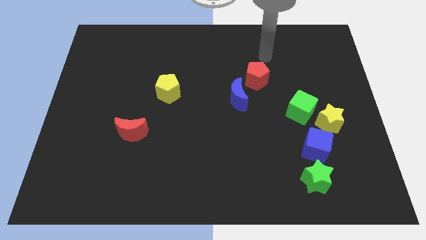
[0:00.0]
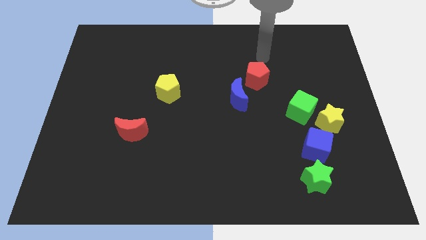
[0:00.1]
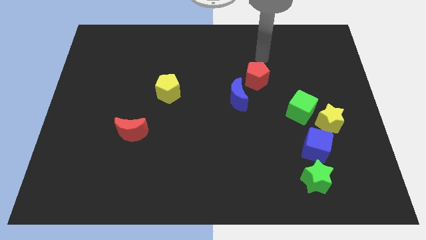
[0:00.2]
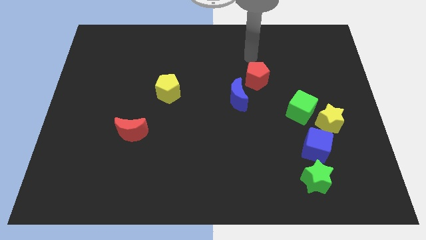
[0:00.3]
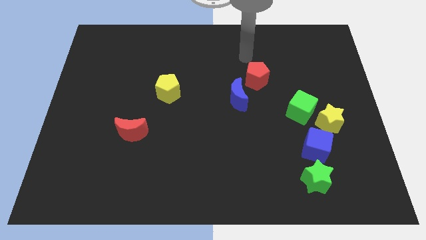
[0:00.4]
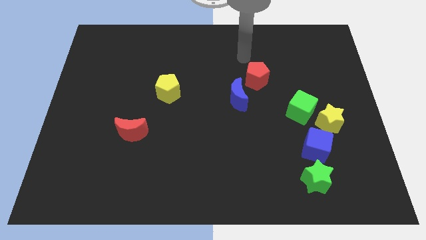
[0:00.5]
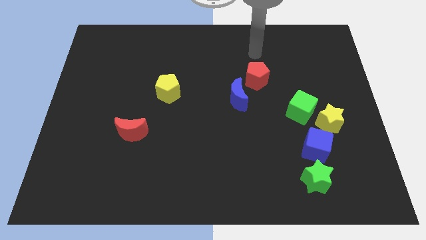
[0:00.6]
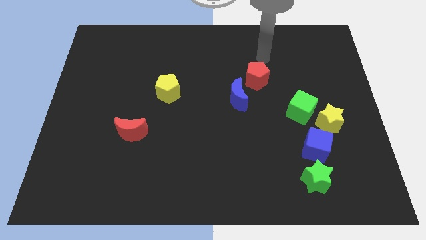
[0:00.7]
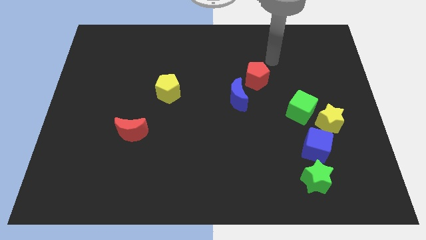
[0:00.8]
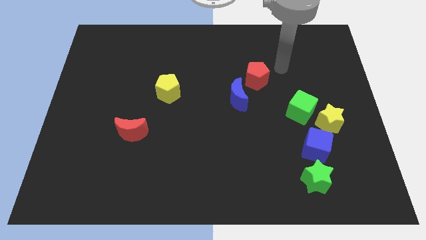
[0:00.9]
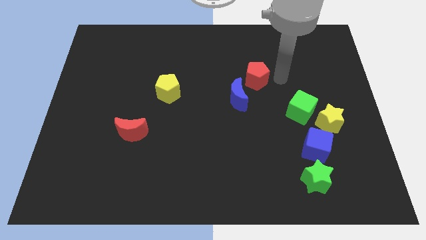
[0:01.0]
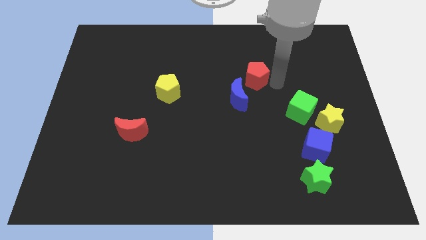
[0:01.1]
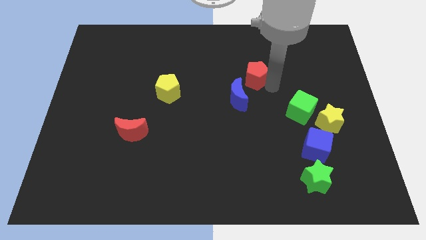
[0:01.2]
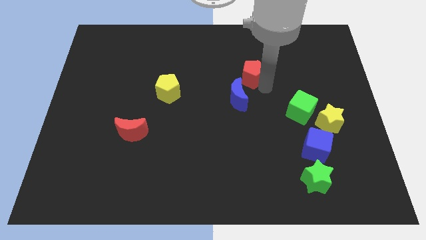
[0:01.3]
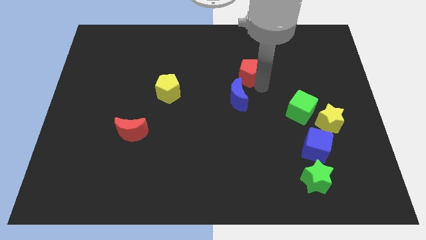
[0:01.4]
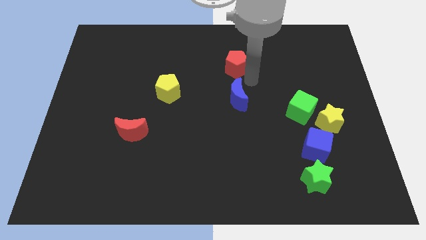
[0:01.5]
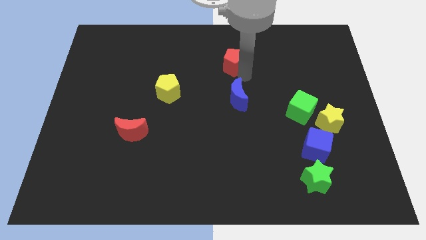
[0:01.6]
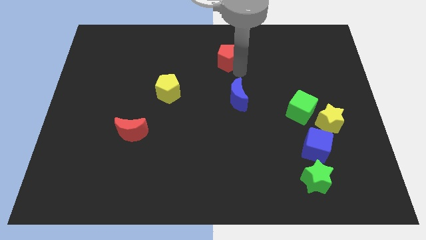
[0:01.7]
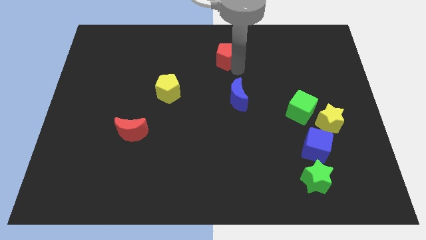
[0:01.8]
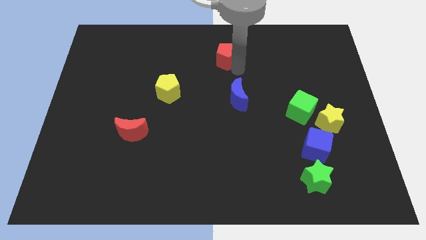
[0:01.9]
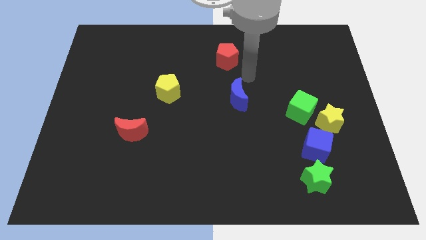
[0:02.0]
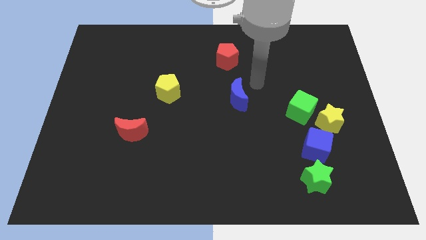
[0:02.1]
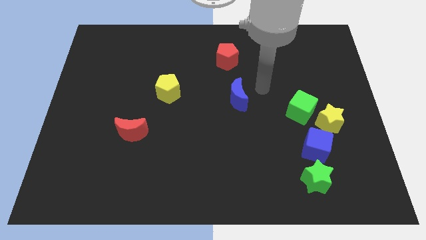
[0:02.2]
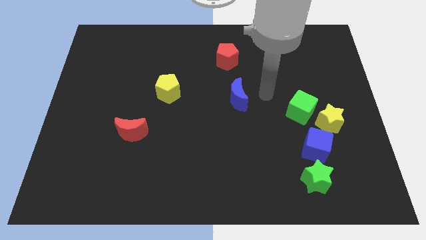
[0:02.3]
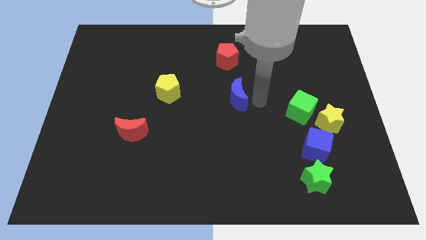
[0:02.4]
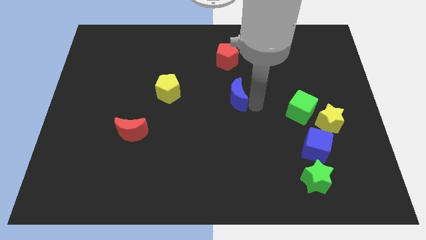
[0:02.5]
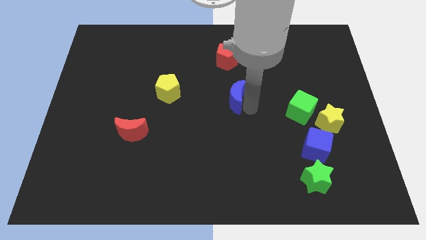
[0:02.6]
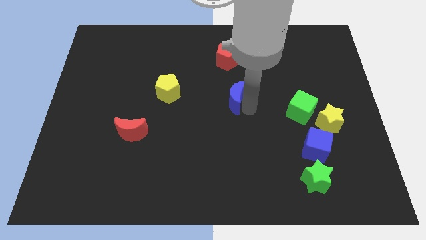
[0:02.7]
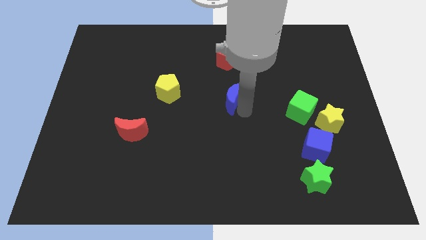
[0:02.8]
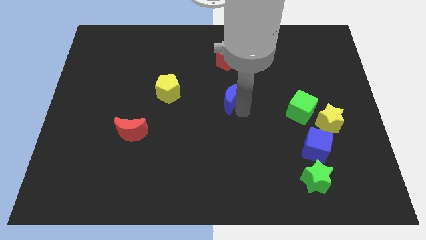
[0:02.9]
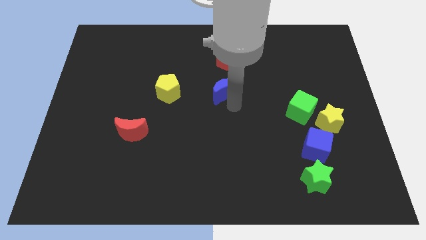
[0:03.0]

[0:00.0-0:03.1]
place red pentagon to the top of blue moon

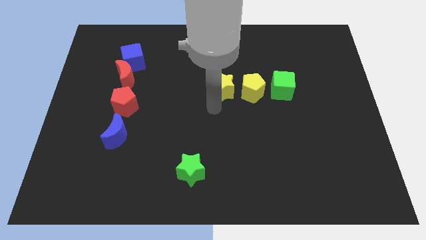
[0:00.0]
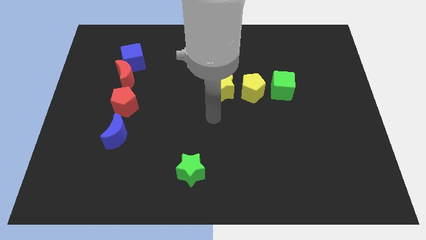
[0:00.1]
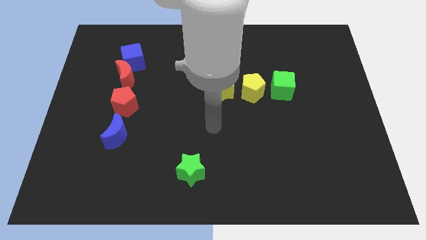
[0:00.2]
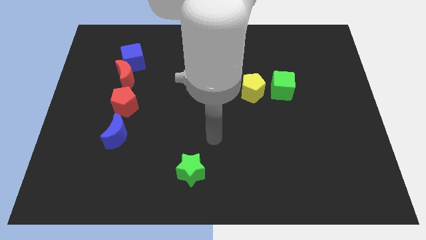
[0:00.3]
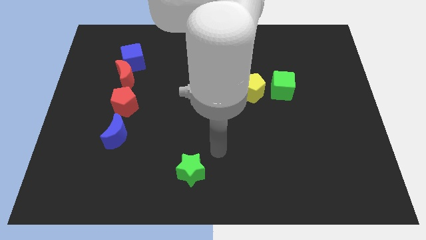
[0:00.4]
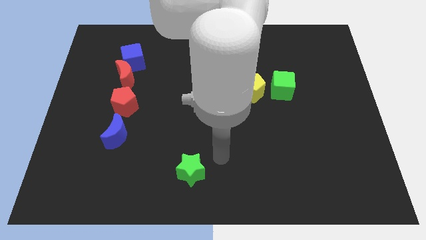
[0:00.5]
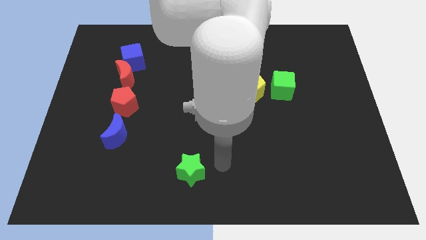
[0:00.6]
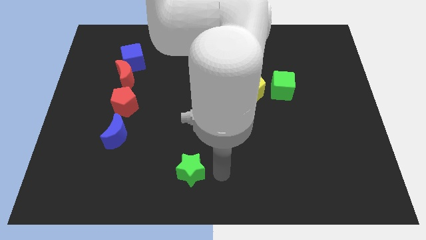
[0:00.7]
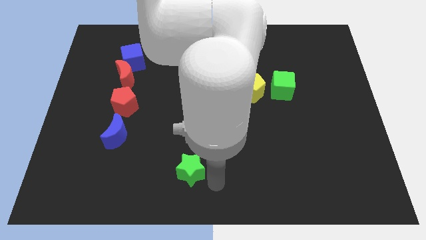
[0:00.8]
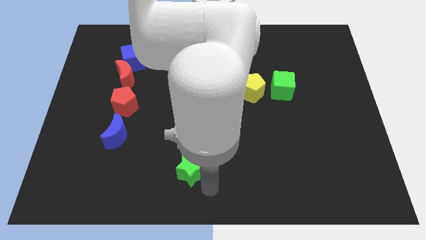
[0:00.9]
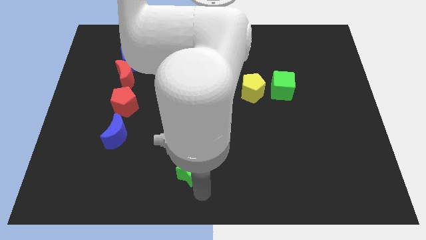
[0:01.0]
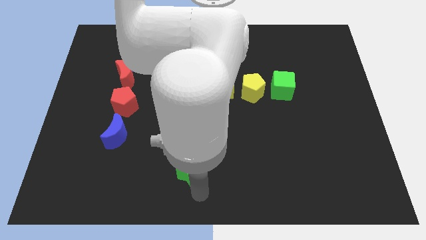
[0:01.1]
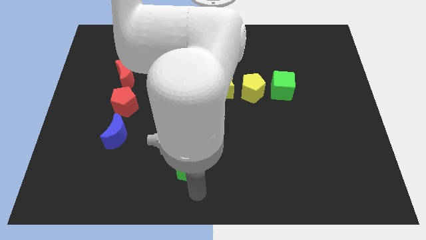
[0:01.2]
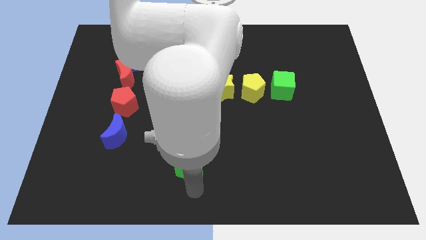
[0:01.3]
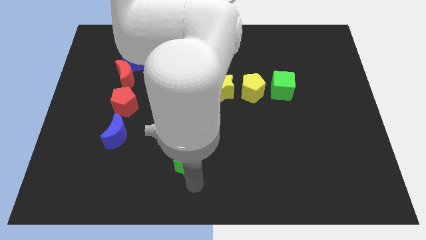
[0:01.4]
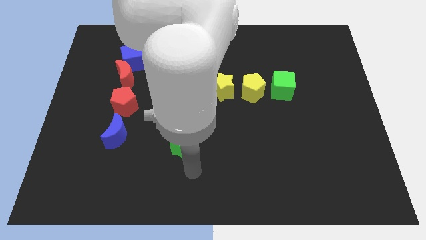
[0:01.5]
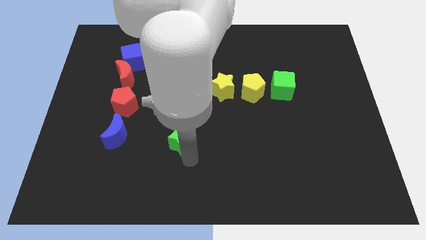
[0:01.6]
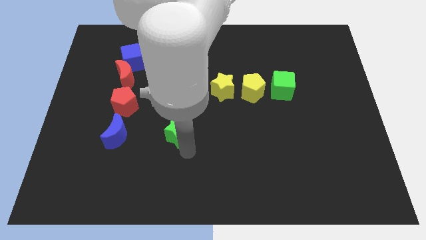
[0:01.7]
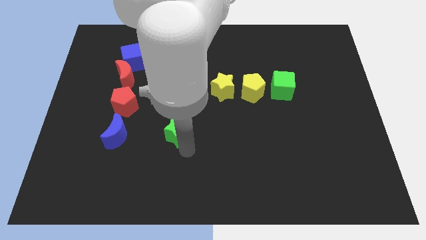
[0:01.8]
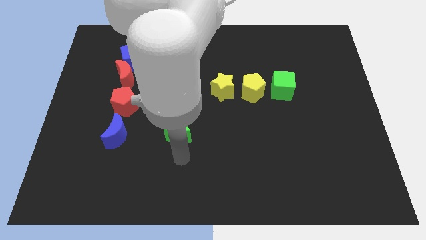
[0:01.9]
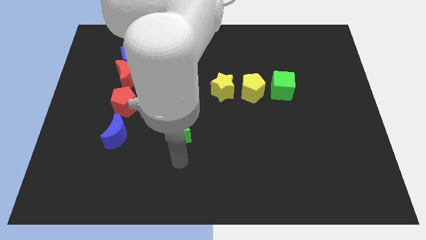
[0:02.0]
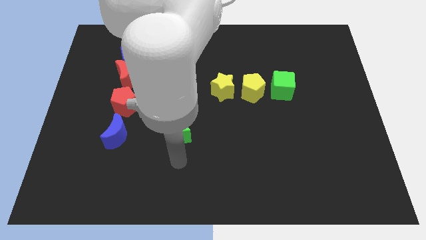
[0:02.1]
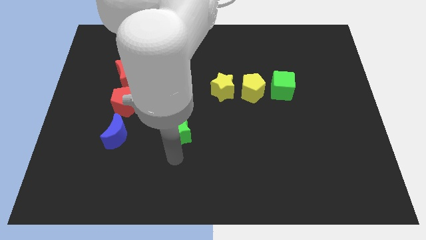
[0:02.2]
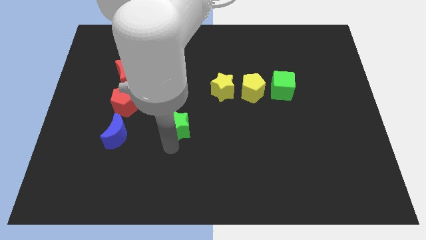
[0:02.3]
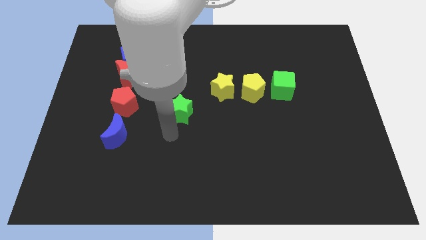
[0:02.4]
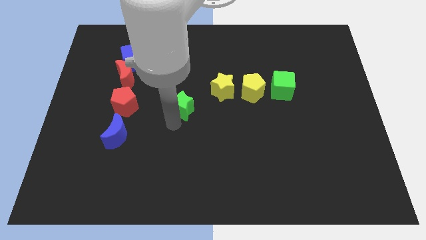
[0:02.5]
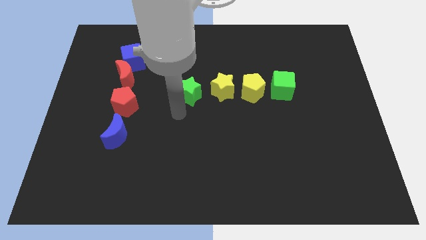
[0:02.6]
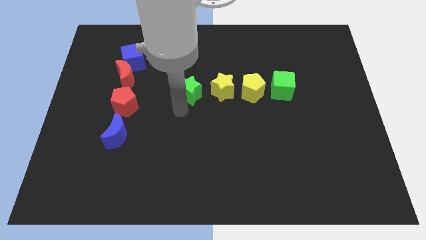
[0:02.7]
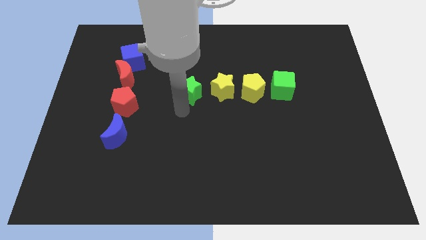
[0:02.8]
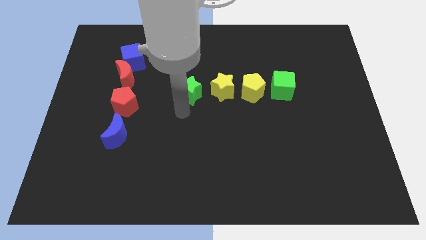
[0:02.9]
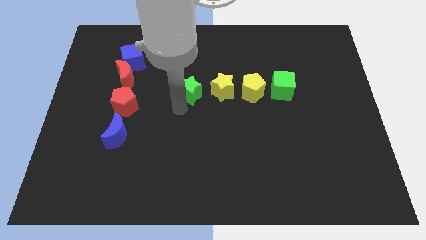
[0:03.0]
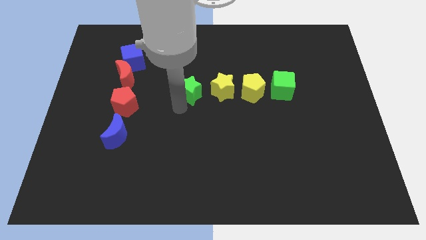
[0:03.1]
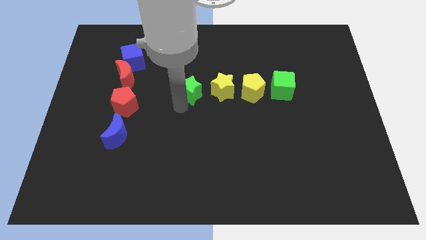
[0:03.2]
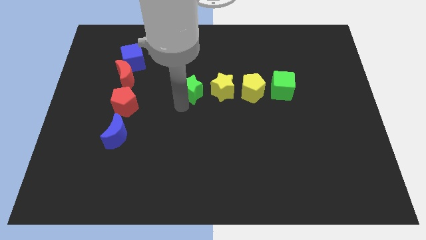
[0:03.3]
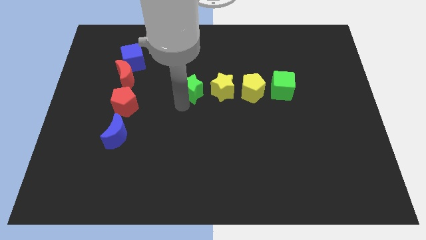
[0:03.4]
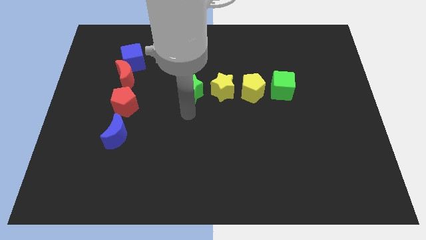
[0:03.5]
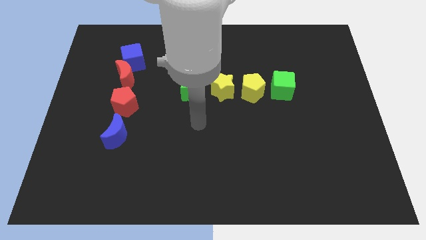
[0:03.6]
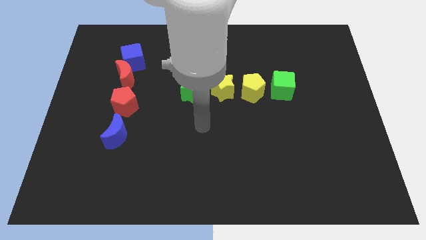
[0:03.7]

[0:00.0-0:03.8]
push the green star to the left side of the yellow star

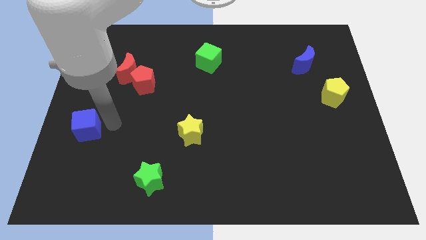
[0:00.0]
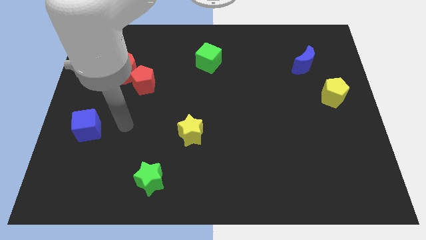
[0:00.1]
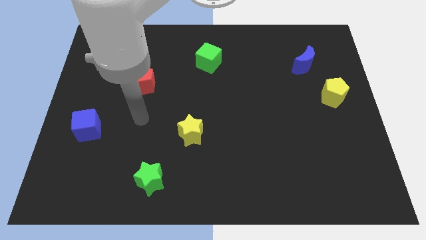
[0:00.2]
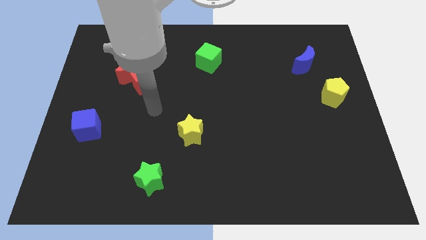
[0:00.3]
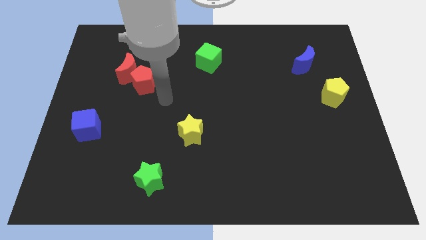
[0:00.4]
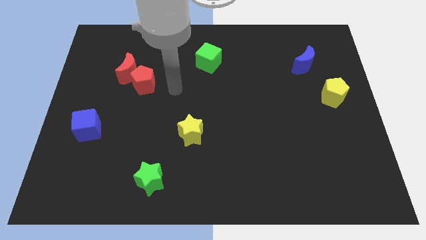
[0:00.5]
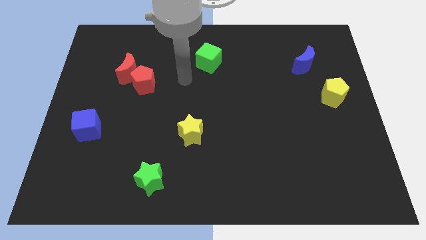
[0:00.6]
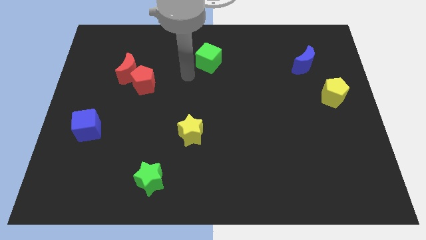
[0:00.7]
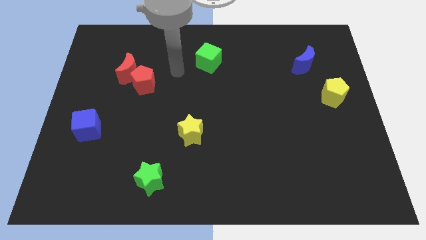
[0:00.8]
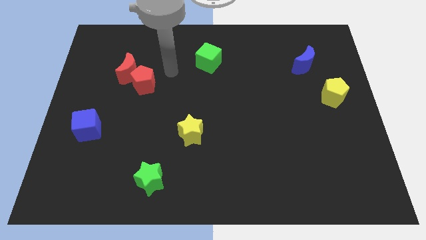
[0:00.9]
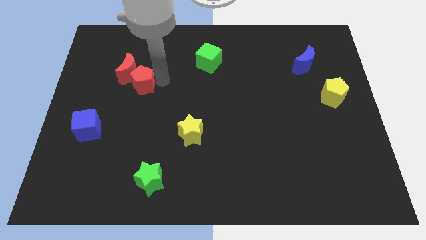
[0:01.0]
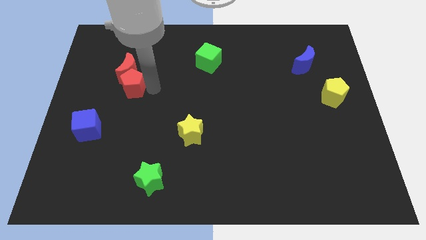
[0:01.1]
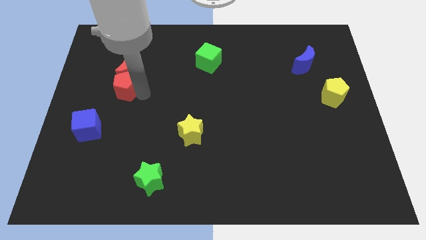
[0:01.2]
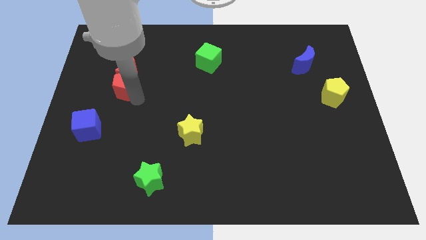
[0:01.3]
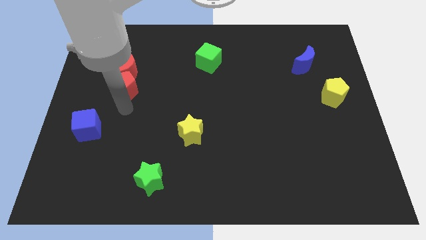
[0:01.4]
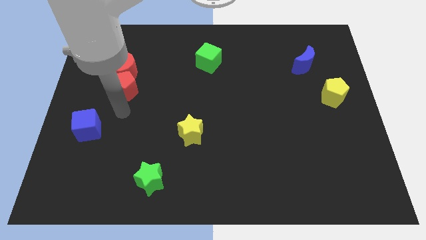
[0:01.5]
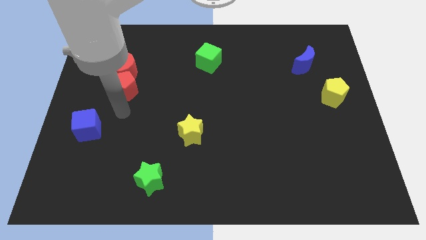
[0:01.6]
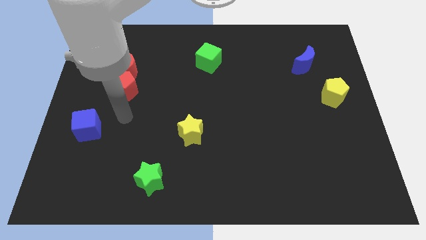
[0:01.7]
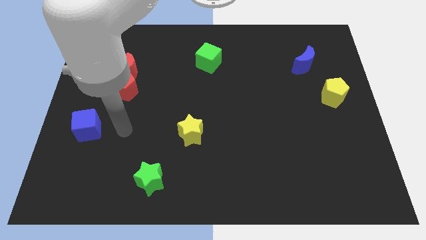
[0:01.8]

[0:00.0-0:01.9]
put the red pentagon below the red moon

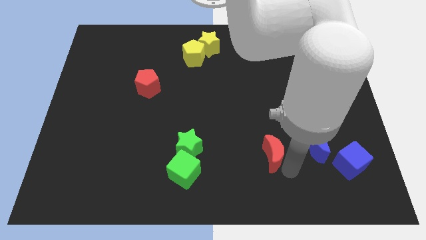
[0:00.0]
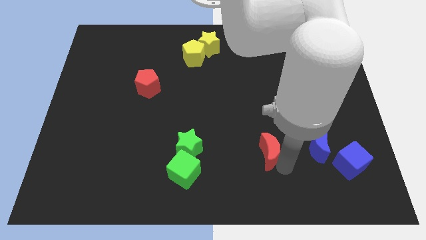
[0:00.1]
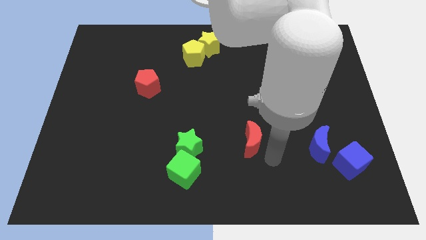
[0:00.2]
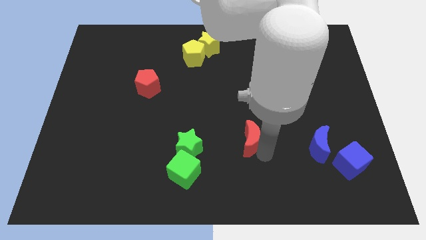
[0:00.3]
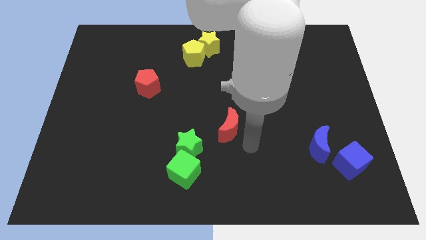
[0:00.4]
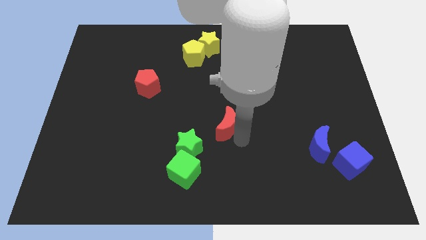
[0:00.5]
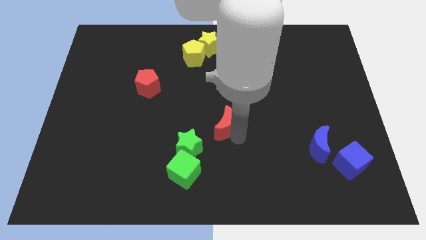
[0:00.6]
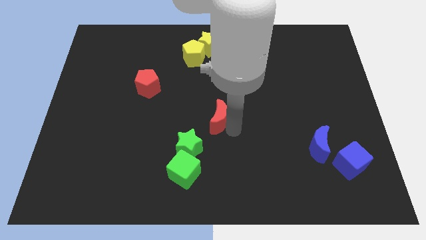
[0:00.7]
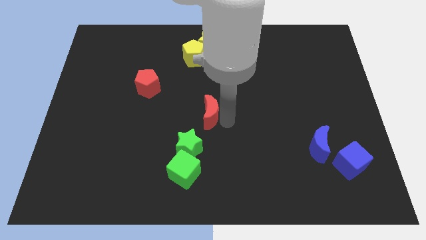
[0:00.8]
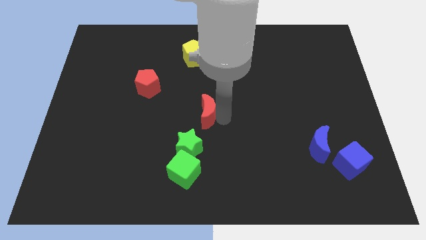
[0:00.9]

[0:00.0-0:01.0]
put red moon at center
